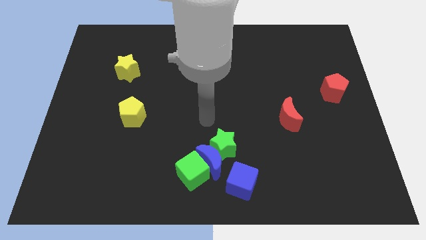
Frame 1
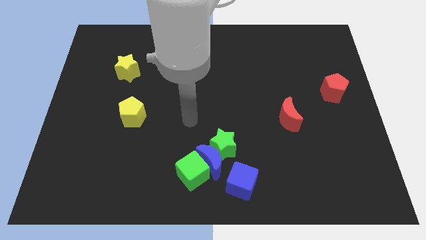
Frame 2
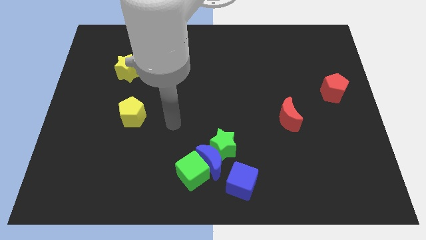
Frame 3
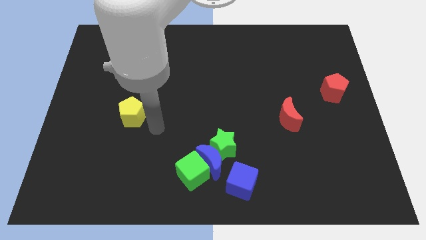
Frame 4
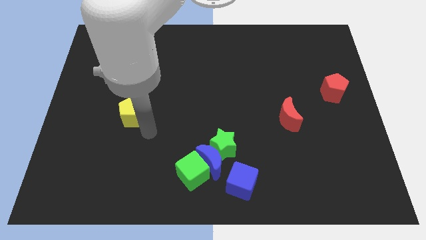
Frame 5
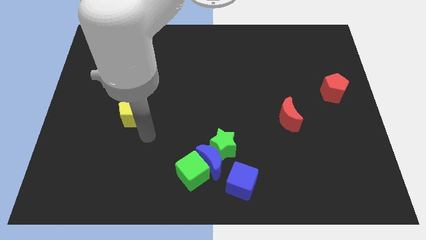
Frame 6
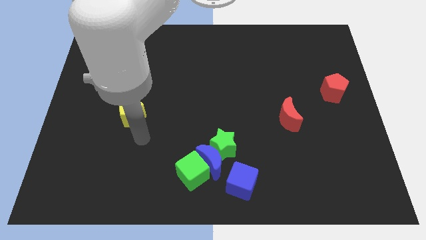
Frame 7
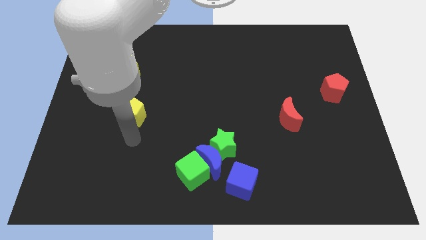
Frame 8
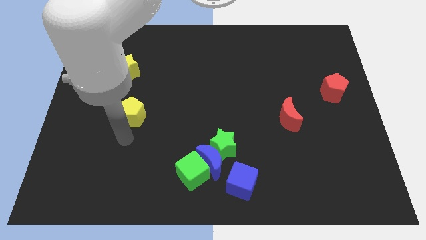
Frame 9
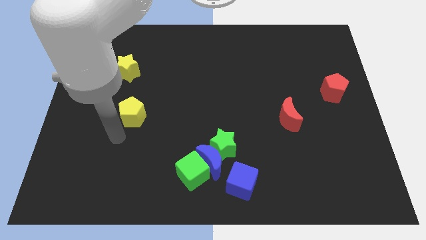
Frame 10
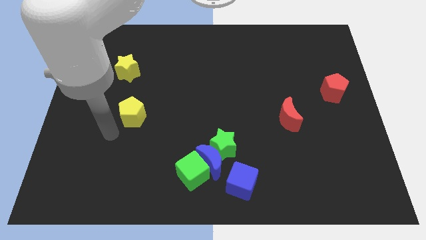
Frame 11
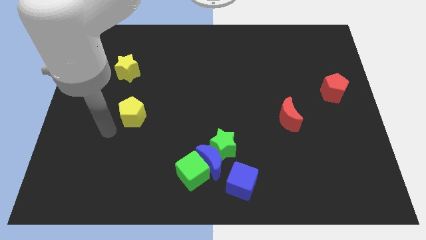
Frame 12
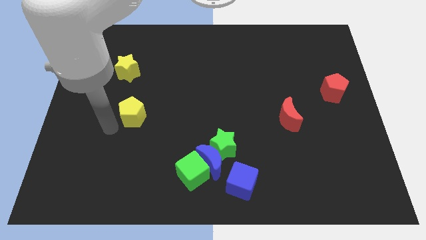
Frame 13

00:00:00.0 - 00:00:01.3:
point your hand at the bottom left side of the pentagon

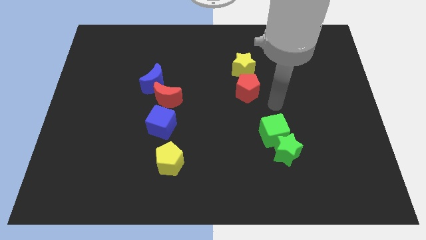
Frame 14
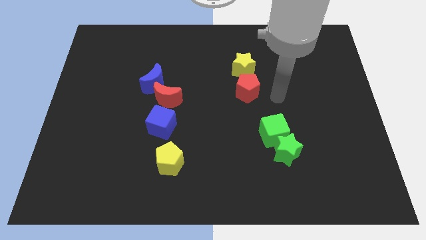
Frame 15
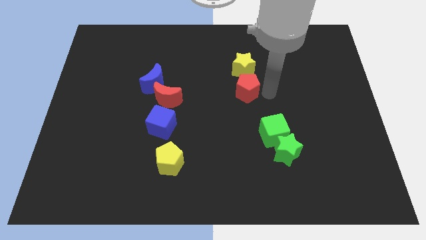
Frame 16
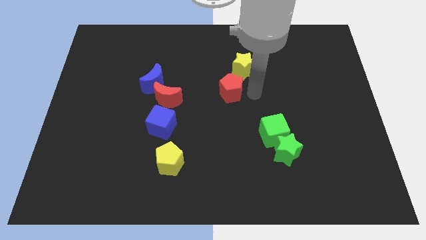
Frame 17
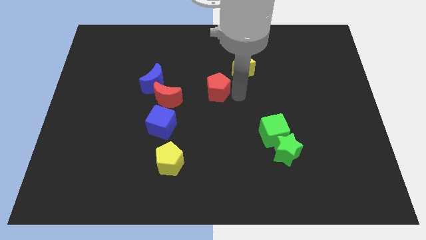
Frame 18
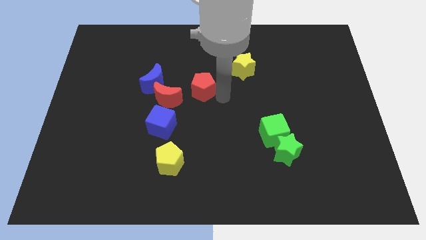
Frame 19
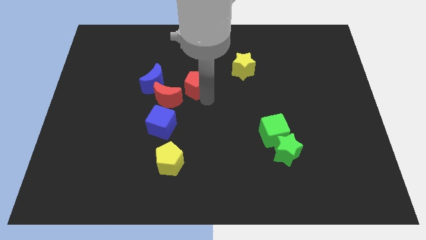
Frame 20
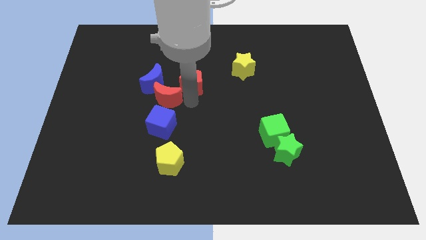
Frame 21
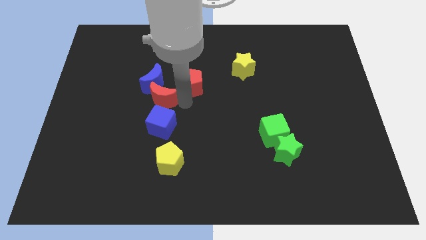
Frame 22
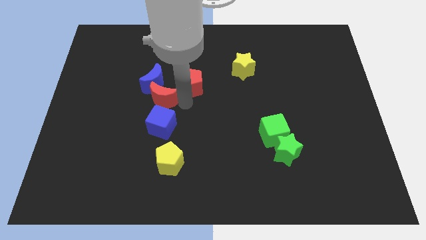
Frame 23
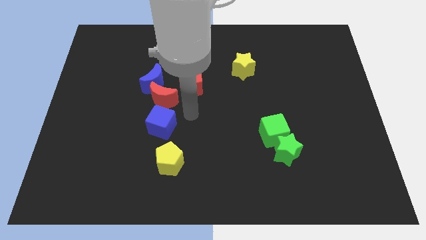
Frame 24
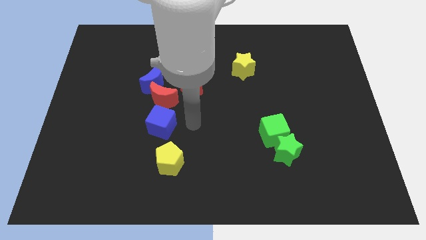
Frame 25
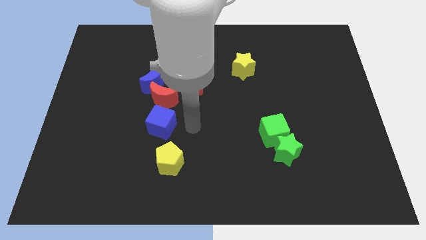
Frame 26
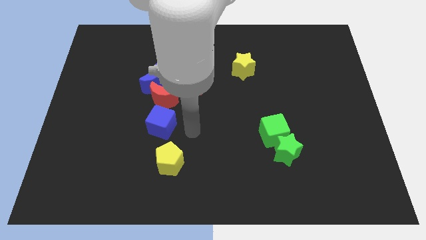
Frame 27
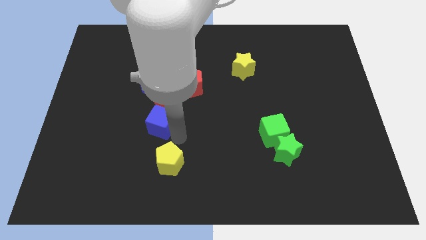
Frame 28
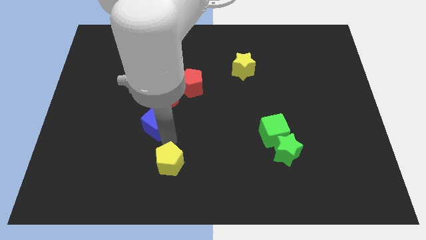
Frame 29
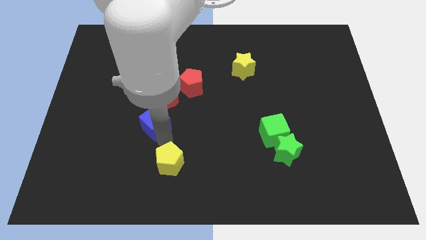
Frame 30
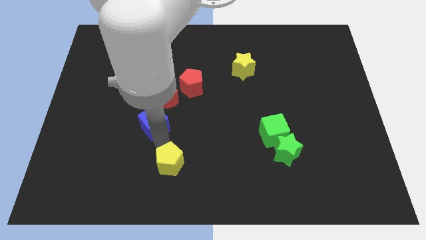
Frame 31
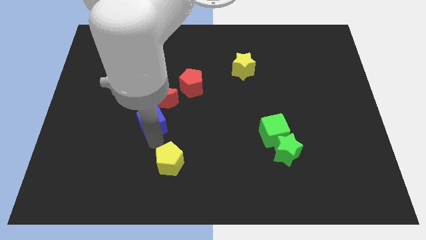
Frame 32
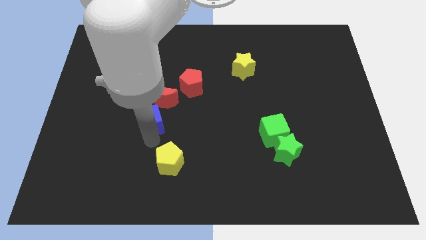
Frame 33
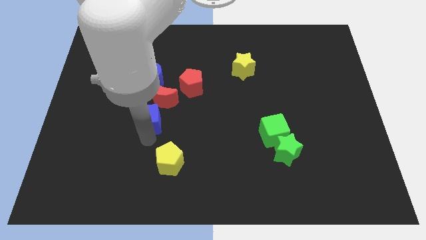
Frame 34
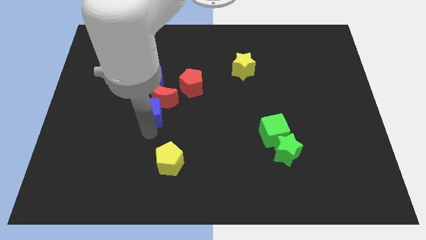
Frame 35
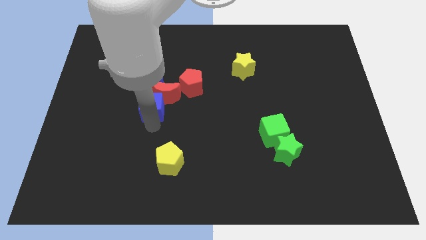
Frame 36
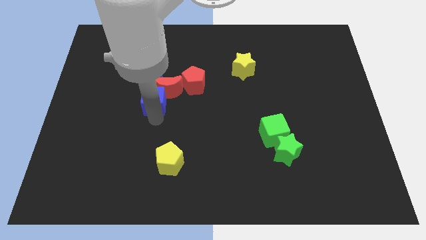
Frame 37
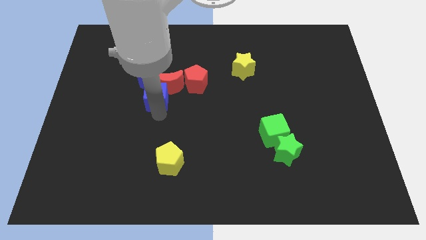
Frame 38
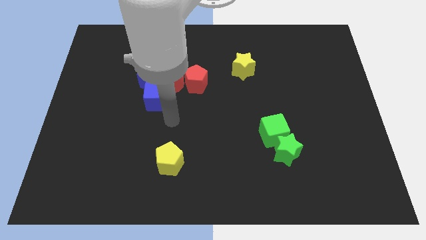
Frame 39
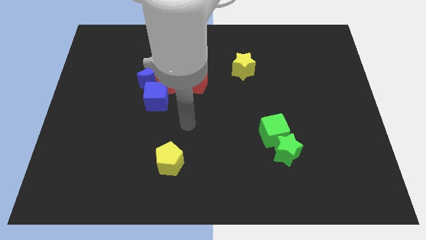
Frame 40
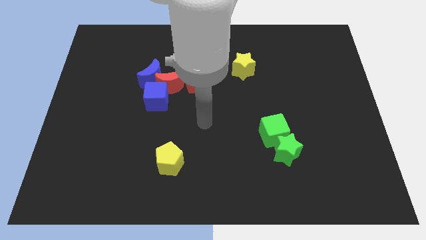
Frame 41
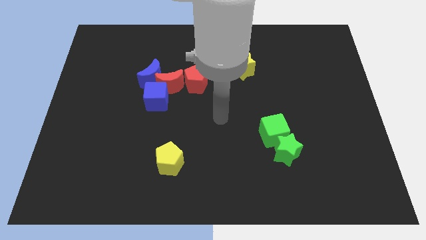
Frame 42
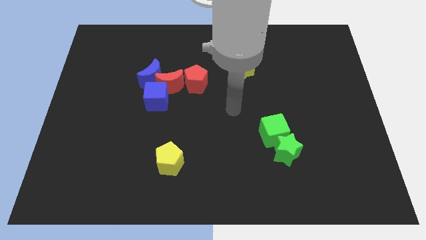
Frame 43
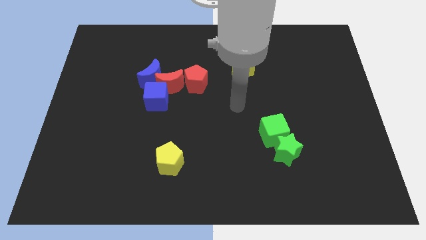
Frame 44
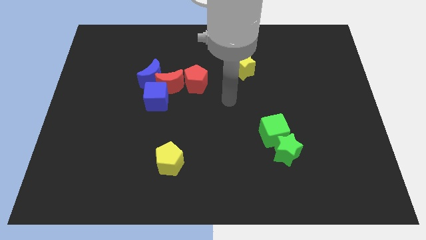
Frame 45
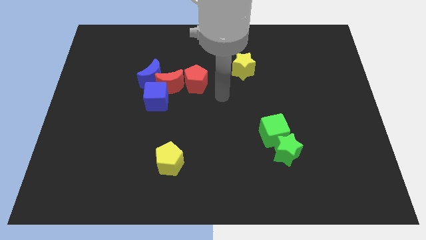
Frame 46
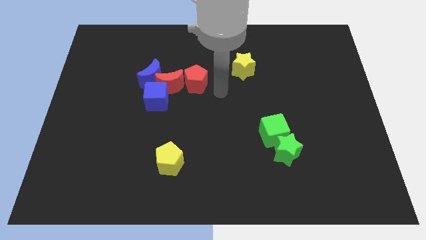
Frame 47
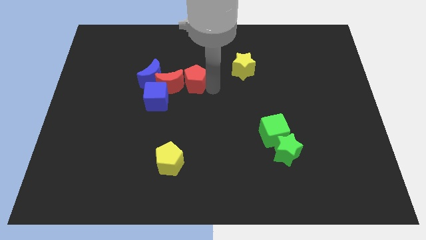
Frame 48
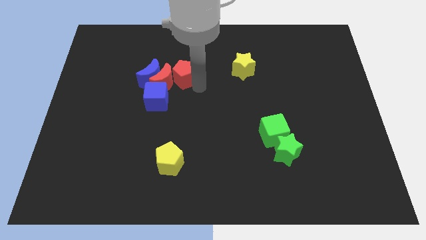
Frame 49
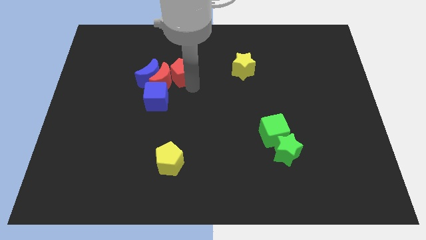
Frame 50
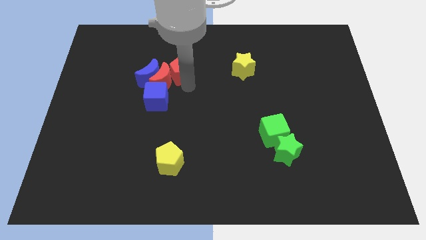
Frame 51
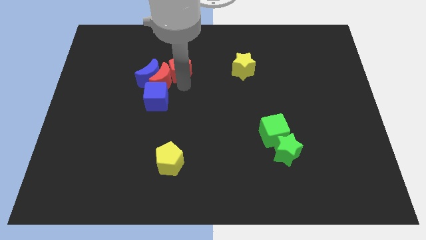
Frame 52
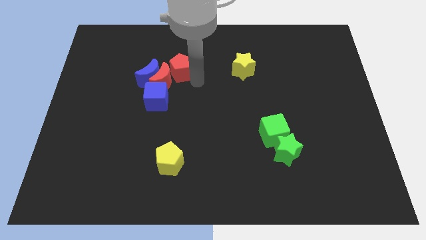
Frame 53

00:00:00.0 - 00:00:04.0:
place red and blue blocks together

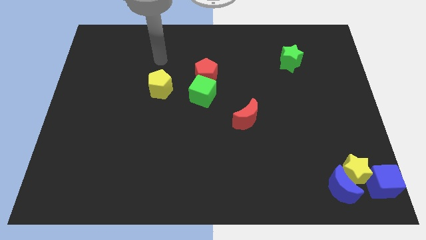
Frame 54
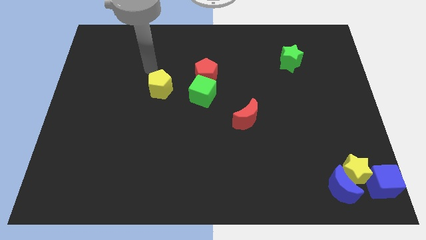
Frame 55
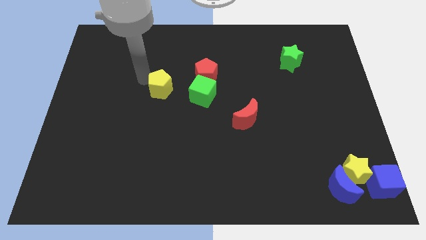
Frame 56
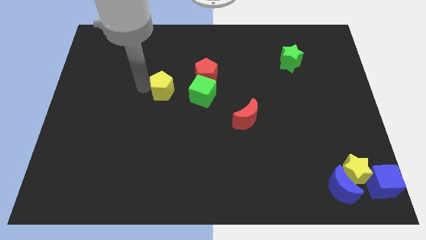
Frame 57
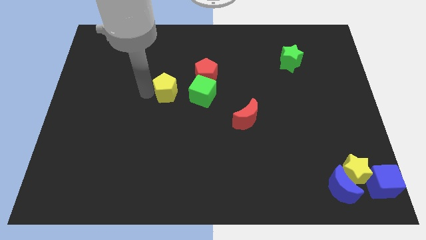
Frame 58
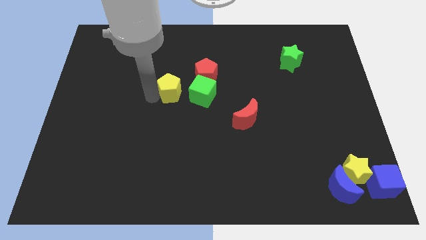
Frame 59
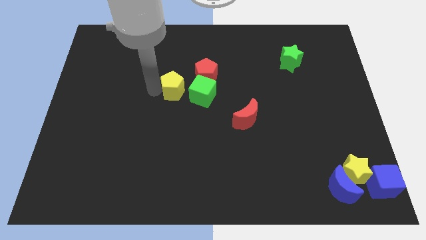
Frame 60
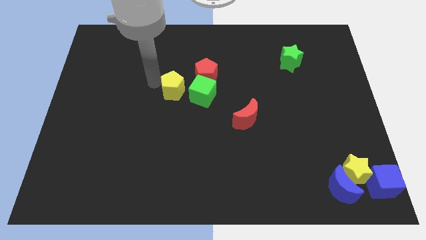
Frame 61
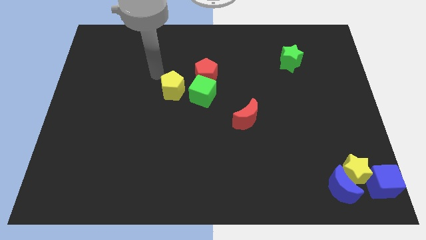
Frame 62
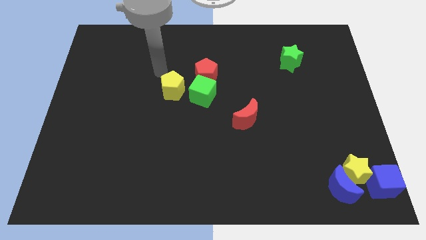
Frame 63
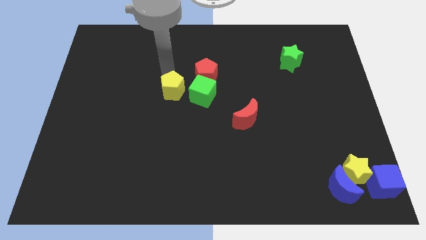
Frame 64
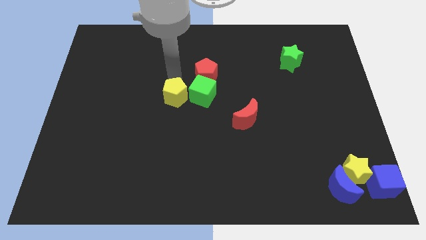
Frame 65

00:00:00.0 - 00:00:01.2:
slightly push the yellow pentagon towards center

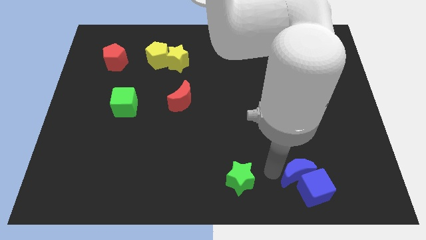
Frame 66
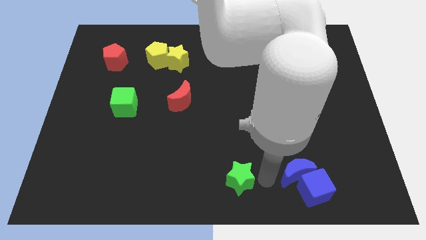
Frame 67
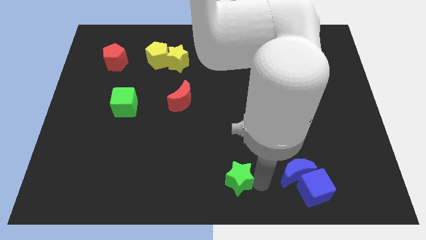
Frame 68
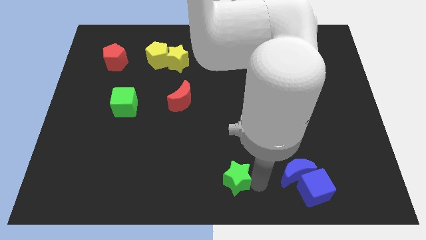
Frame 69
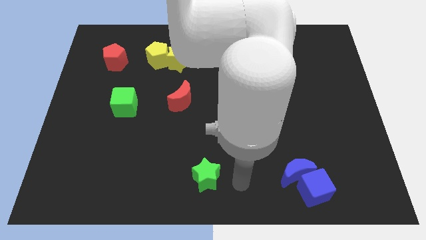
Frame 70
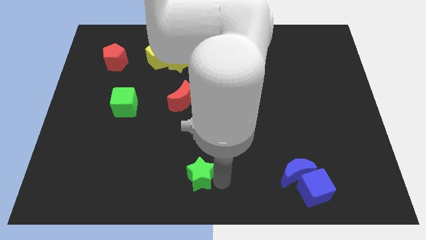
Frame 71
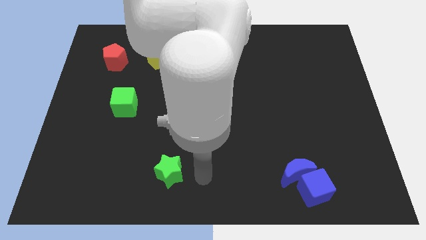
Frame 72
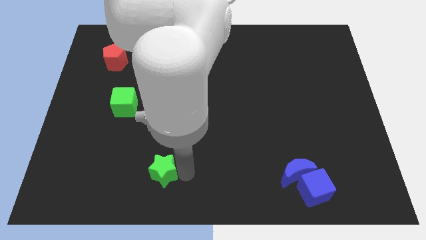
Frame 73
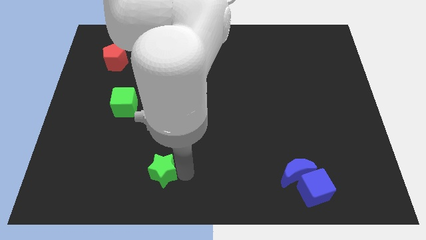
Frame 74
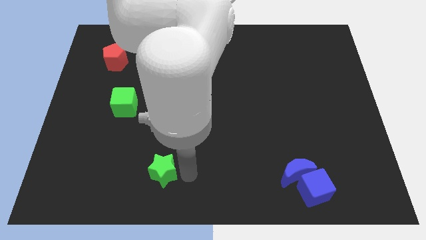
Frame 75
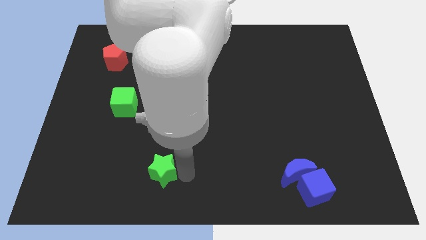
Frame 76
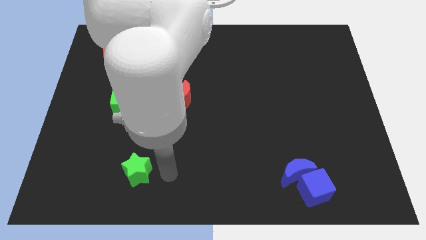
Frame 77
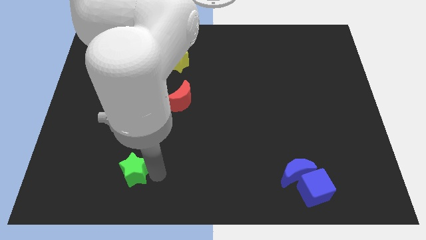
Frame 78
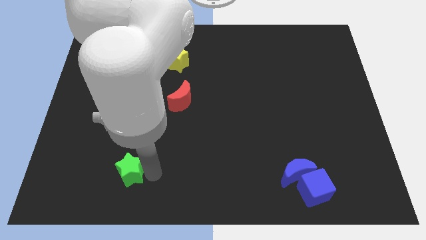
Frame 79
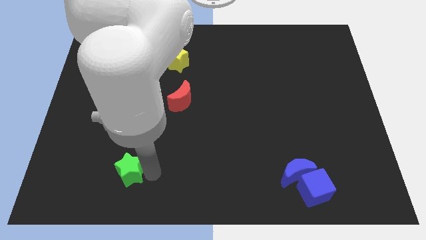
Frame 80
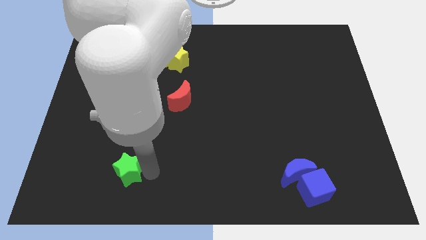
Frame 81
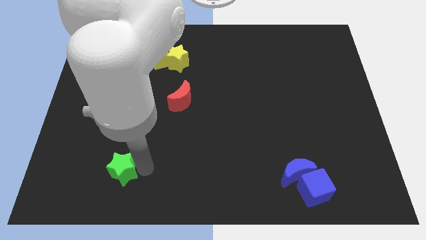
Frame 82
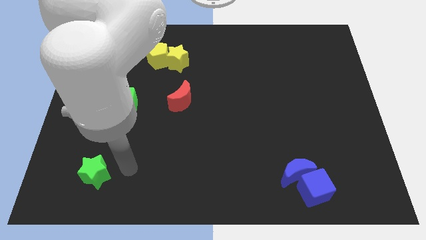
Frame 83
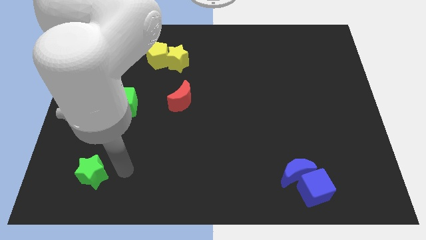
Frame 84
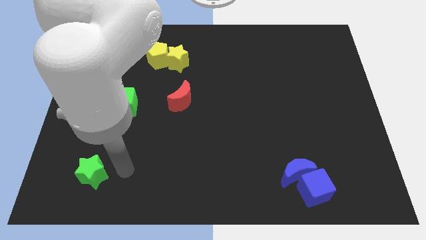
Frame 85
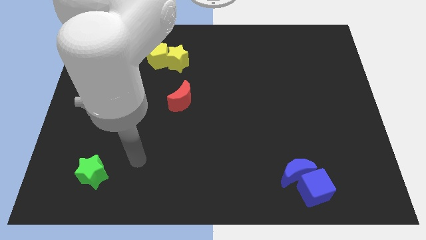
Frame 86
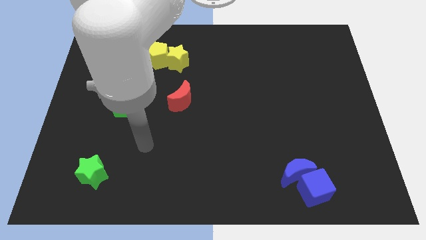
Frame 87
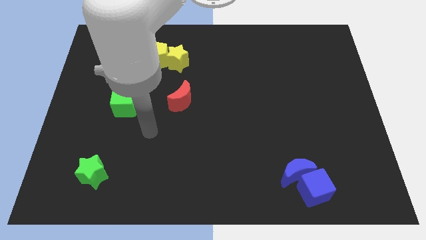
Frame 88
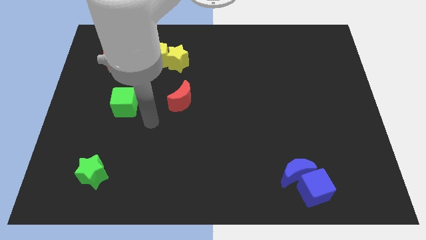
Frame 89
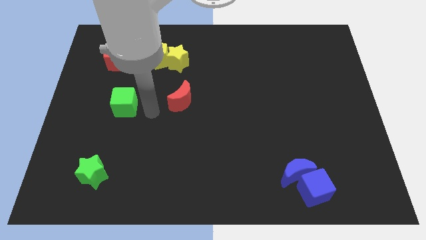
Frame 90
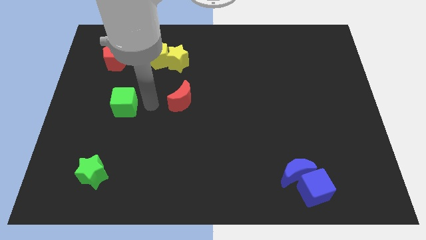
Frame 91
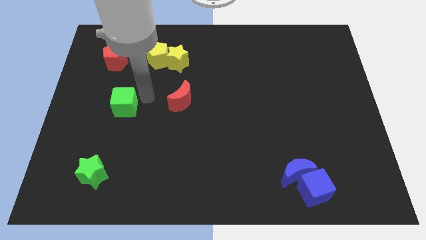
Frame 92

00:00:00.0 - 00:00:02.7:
place the green star vertically below the green cube
